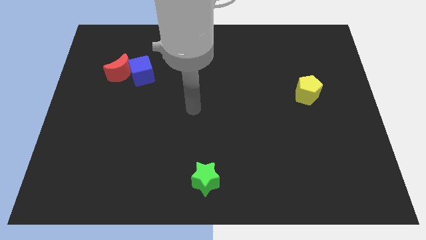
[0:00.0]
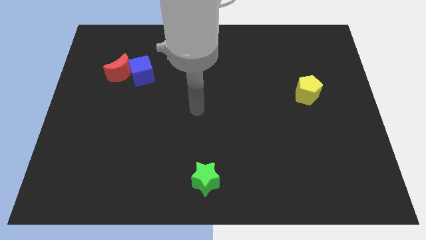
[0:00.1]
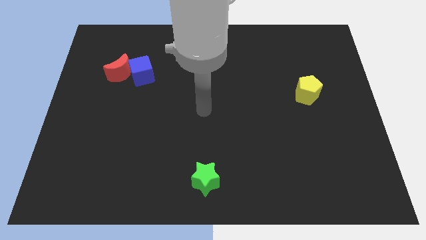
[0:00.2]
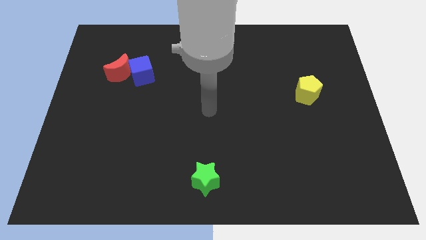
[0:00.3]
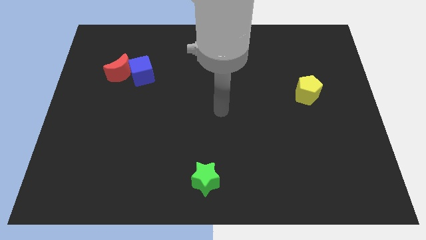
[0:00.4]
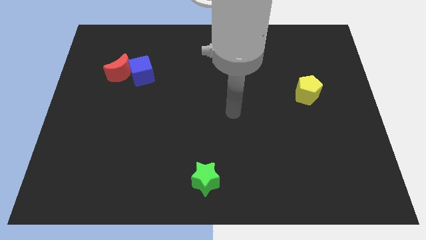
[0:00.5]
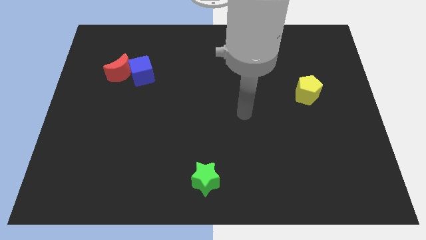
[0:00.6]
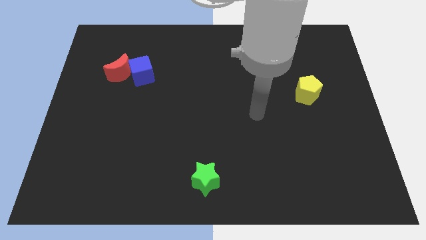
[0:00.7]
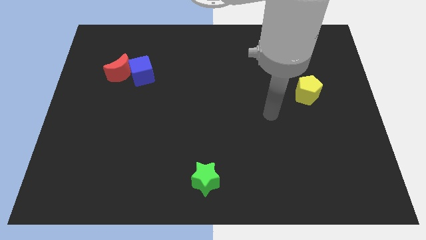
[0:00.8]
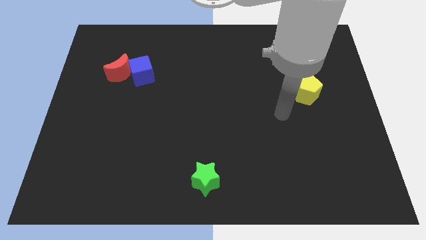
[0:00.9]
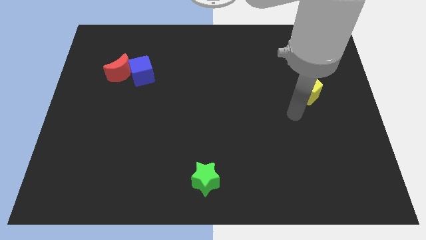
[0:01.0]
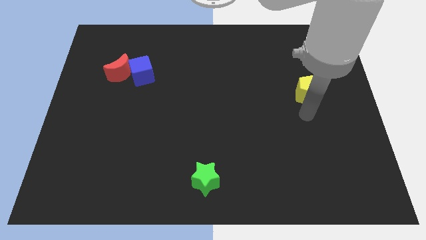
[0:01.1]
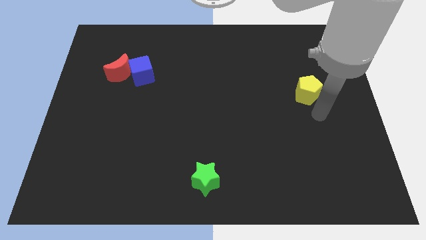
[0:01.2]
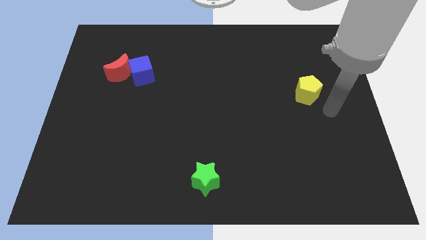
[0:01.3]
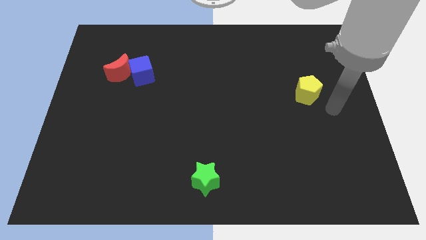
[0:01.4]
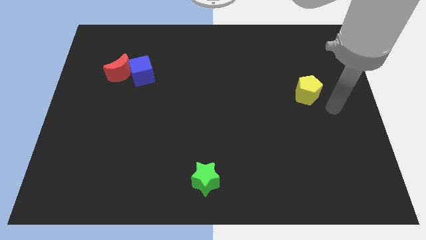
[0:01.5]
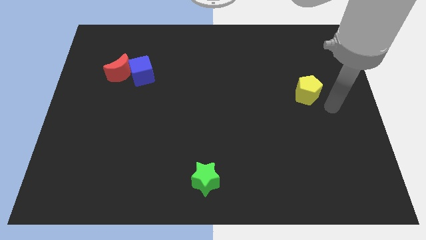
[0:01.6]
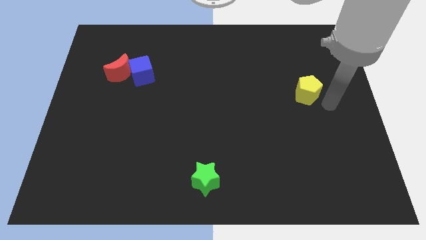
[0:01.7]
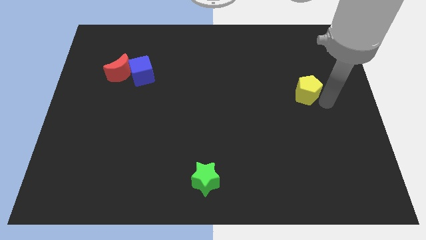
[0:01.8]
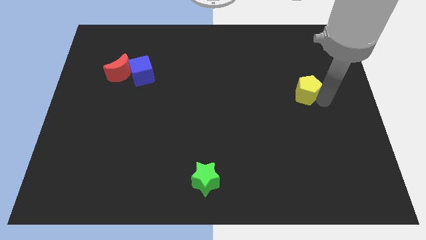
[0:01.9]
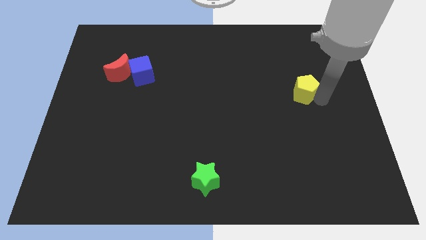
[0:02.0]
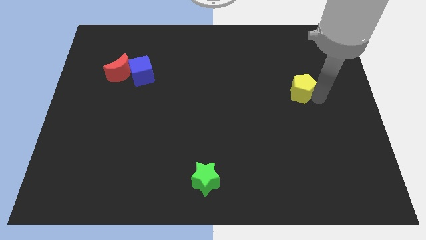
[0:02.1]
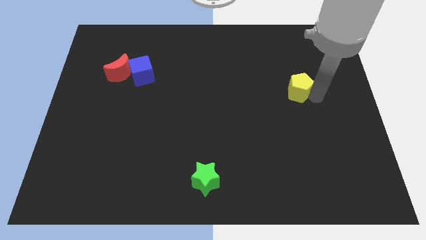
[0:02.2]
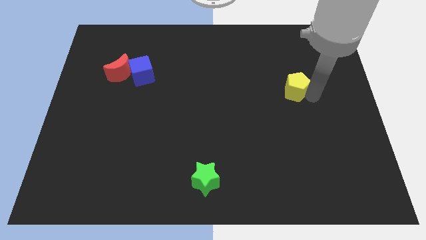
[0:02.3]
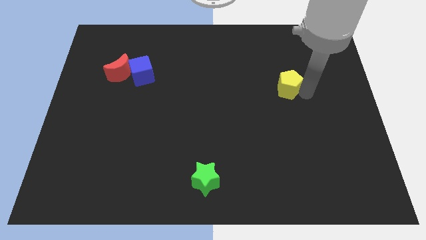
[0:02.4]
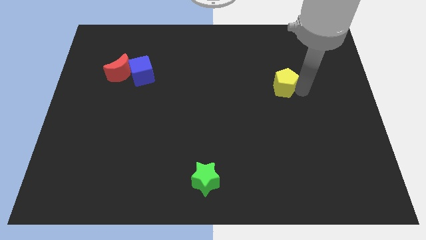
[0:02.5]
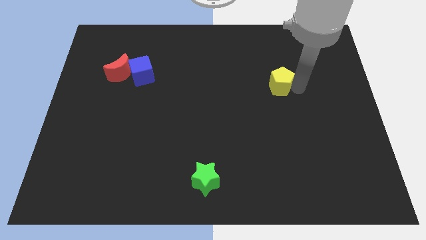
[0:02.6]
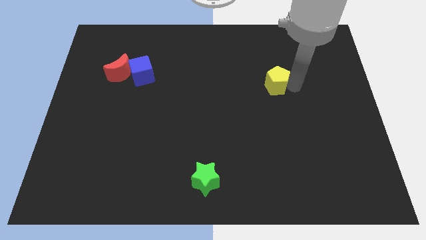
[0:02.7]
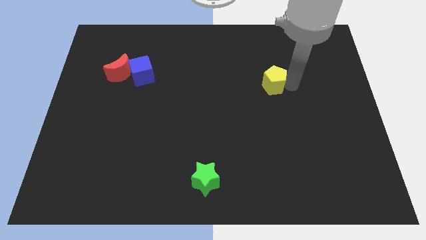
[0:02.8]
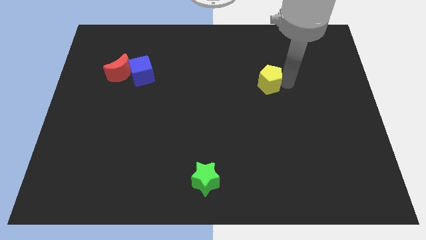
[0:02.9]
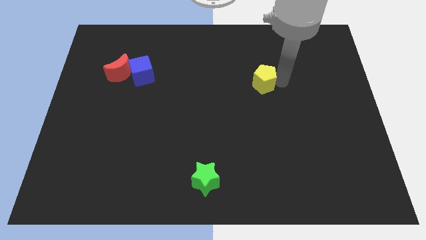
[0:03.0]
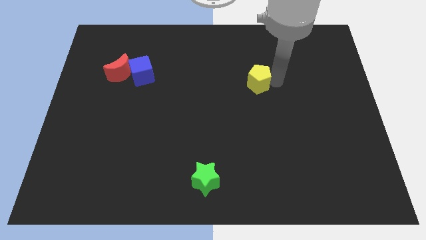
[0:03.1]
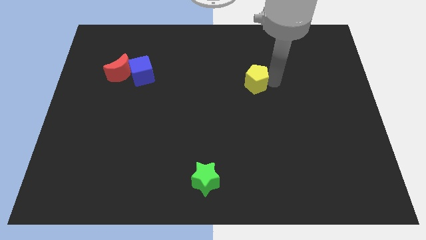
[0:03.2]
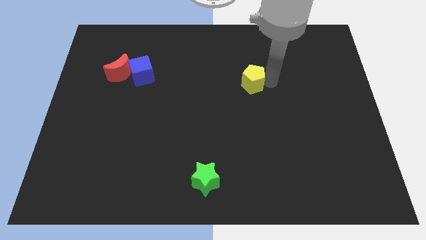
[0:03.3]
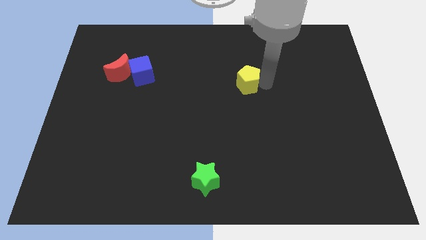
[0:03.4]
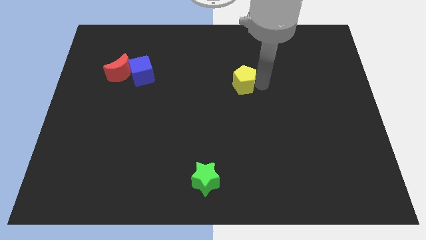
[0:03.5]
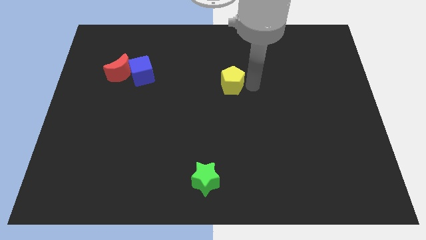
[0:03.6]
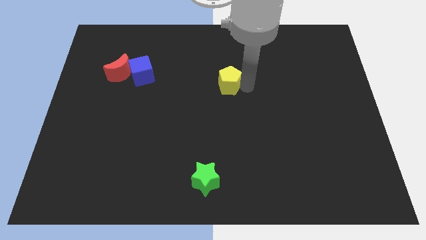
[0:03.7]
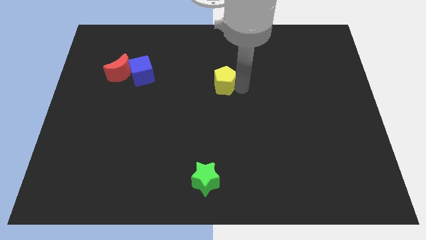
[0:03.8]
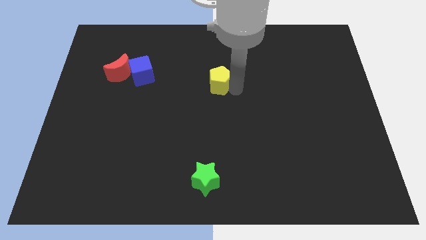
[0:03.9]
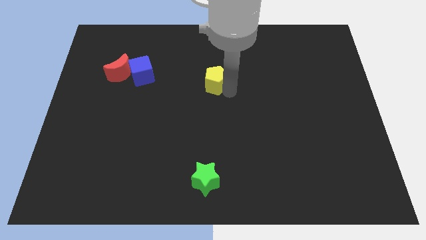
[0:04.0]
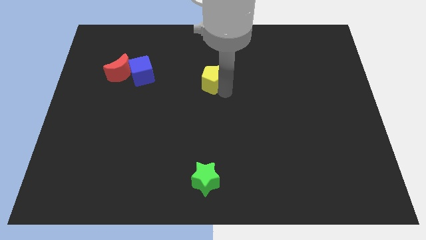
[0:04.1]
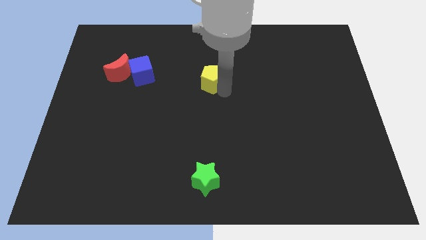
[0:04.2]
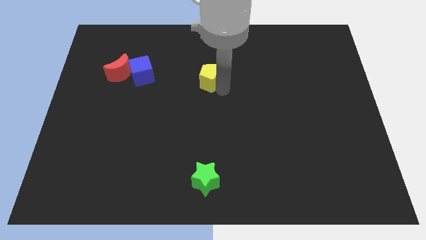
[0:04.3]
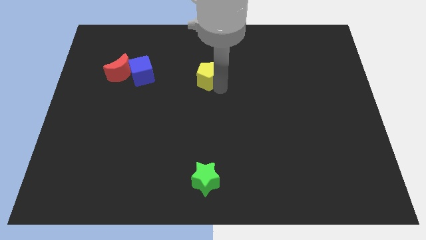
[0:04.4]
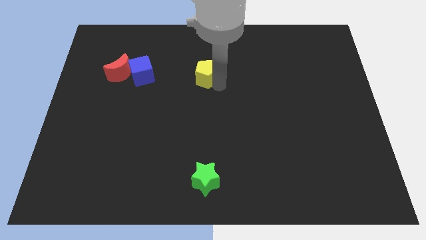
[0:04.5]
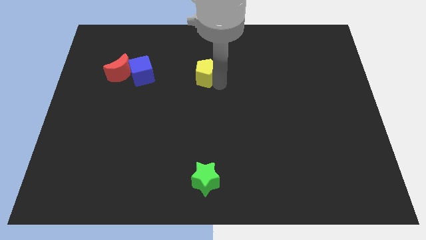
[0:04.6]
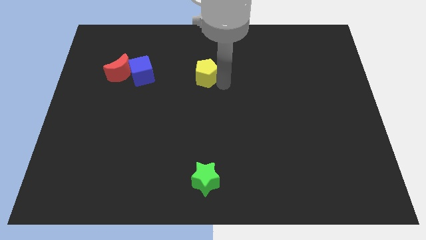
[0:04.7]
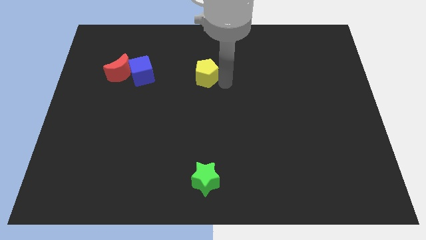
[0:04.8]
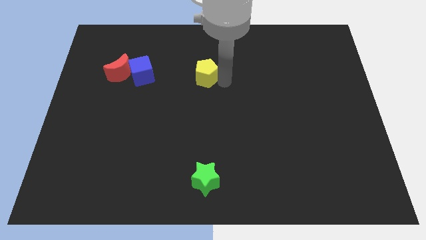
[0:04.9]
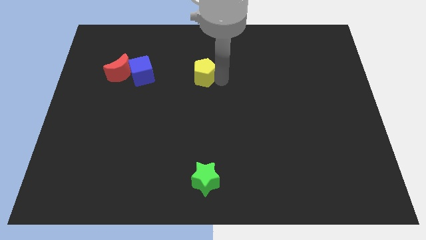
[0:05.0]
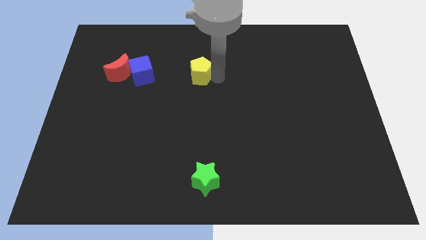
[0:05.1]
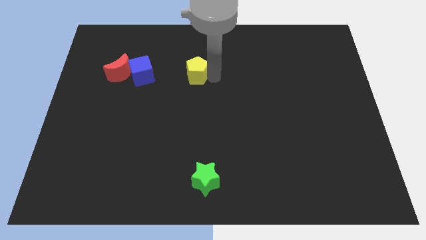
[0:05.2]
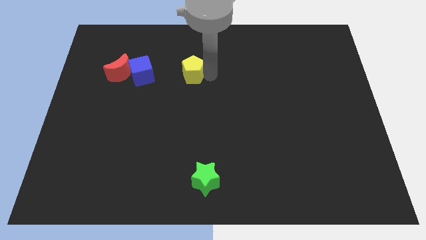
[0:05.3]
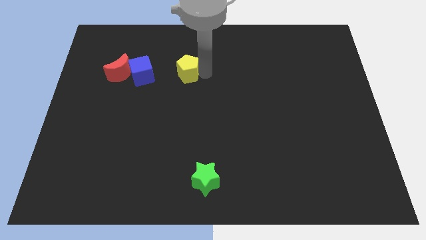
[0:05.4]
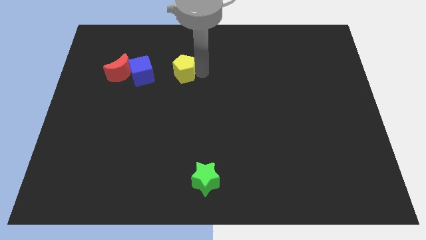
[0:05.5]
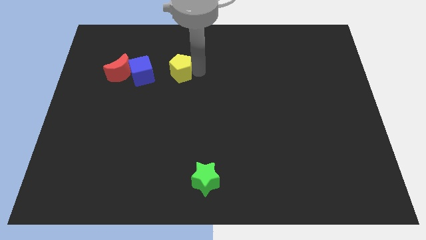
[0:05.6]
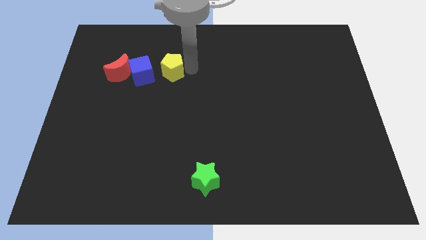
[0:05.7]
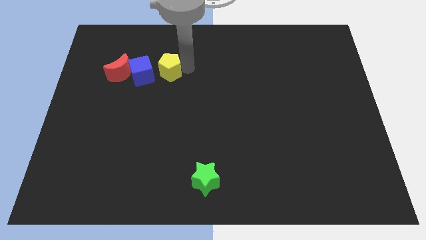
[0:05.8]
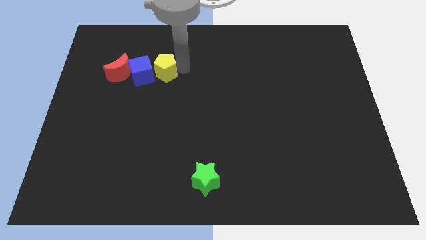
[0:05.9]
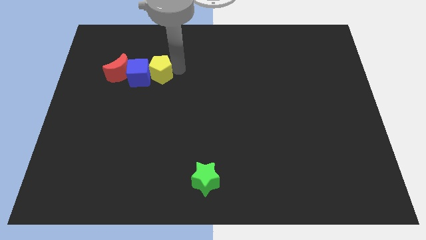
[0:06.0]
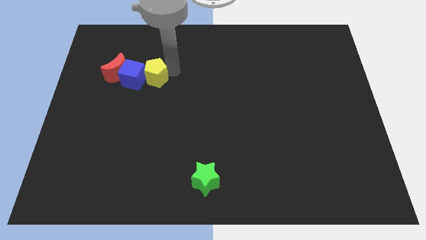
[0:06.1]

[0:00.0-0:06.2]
slide the yellow block close to the cube

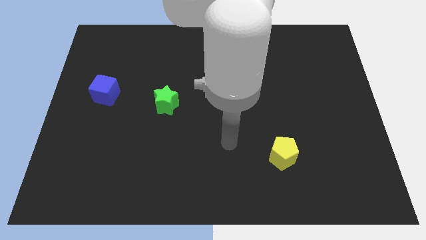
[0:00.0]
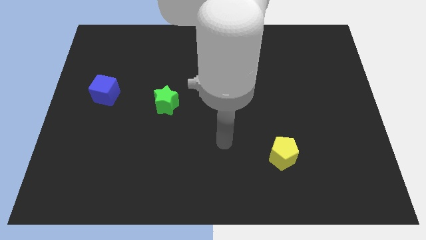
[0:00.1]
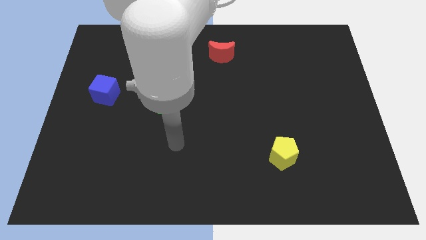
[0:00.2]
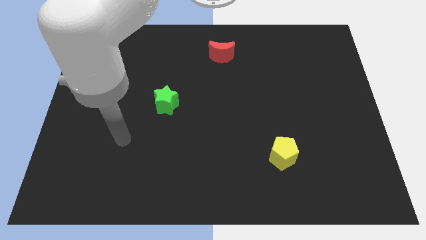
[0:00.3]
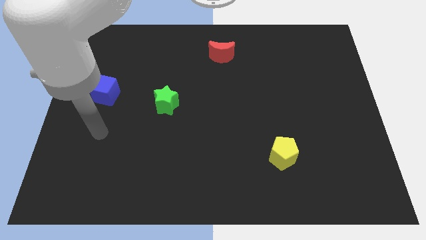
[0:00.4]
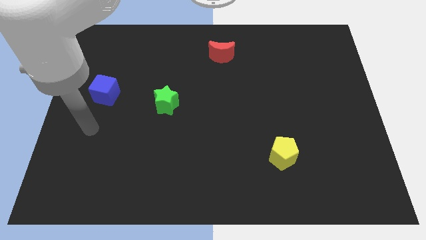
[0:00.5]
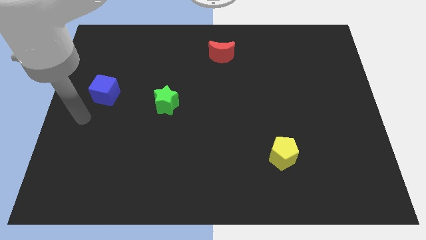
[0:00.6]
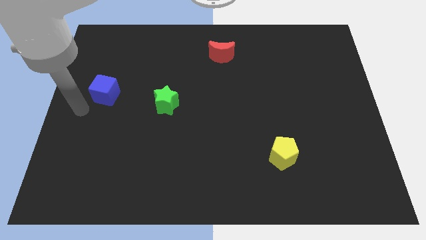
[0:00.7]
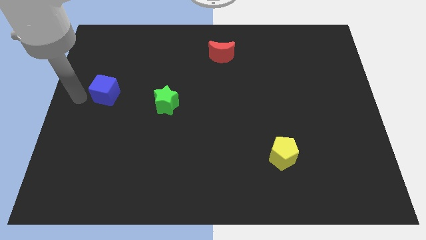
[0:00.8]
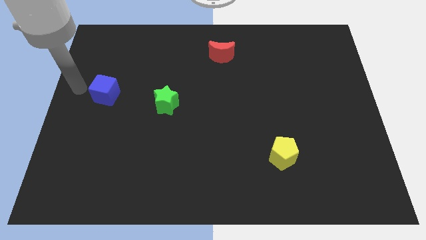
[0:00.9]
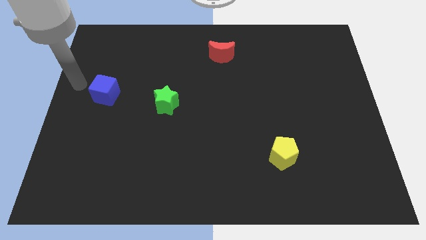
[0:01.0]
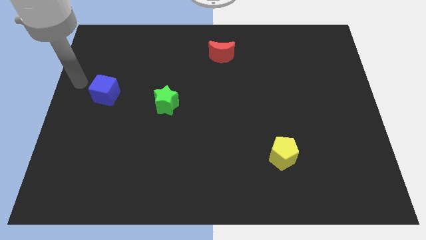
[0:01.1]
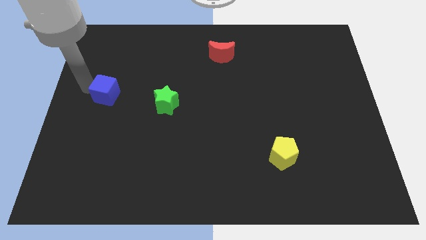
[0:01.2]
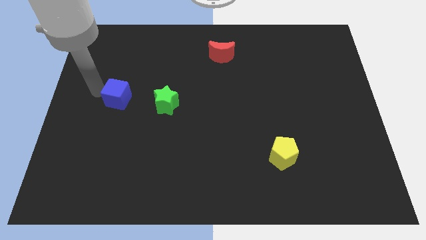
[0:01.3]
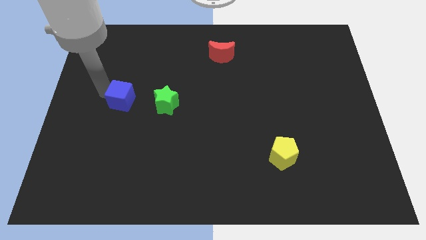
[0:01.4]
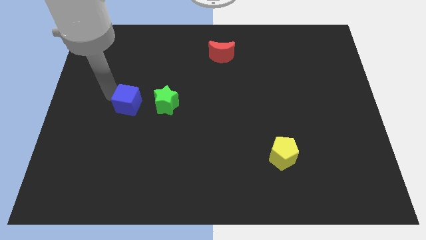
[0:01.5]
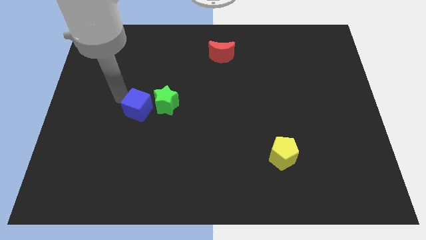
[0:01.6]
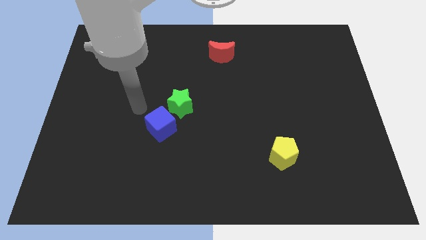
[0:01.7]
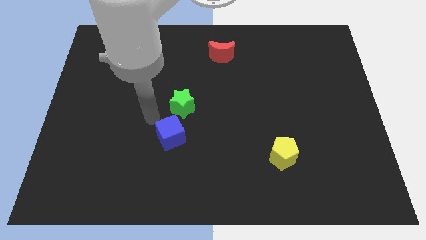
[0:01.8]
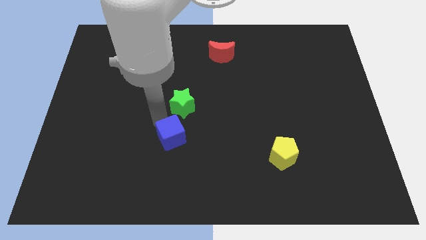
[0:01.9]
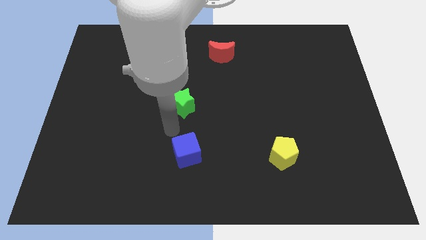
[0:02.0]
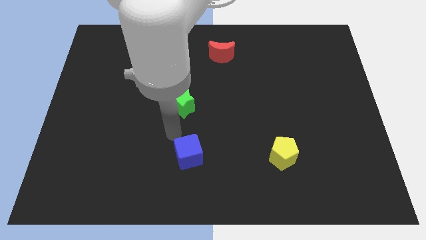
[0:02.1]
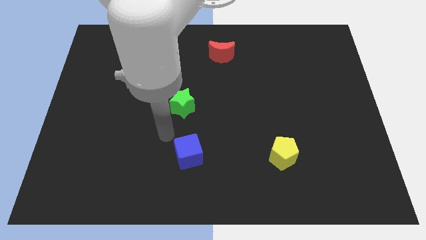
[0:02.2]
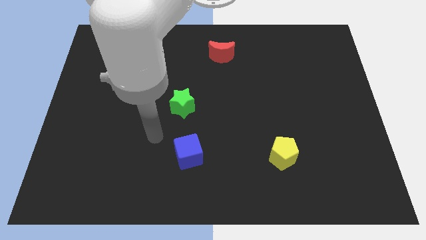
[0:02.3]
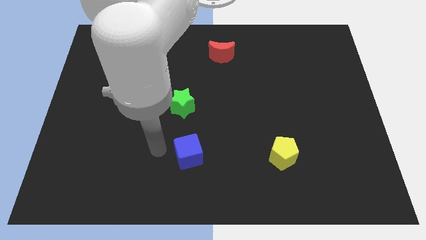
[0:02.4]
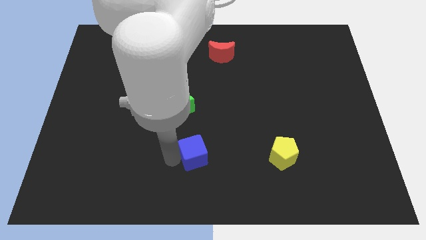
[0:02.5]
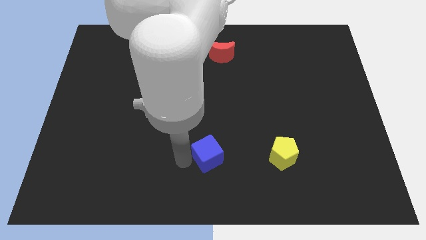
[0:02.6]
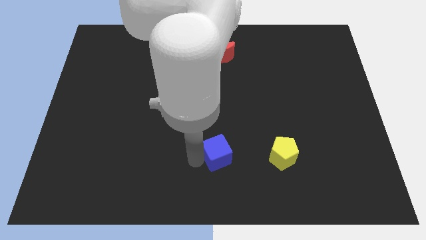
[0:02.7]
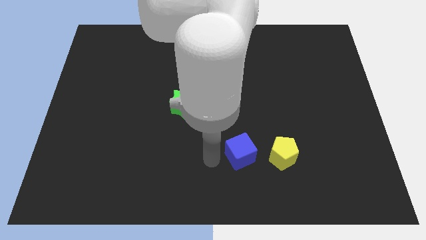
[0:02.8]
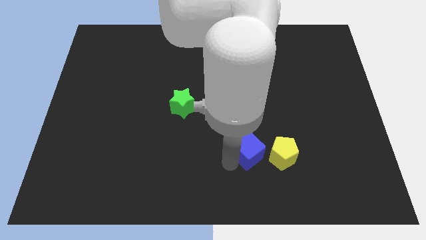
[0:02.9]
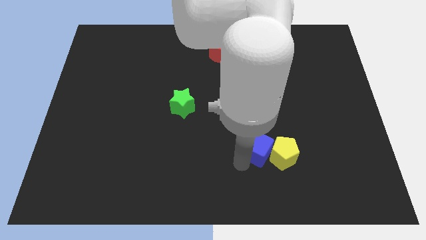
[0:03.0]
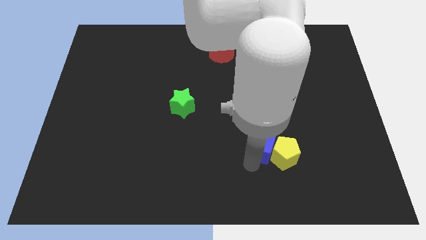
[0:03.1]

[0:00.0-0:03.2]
push the cube next to the yellow pentagon
